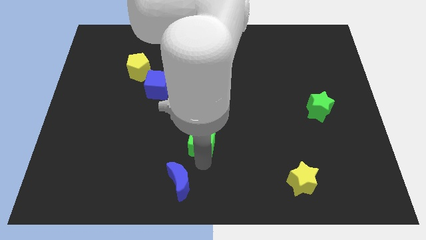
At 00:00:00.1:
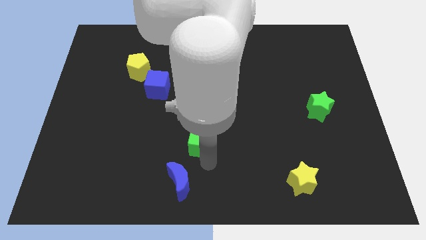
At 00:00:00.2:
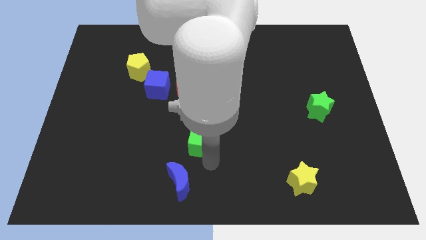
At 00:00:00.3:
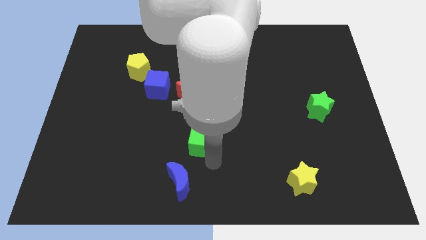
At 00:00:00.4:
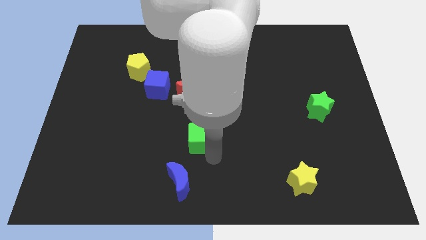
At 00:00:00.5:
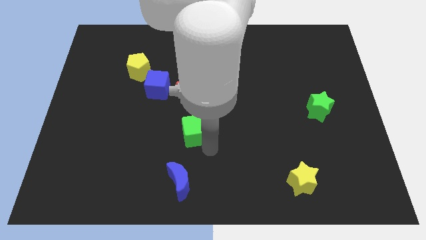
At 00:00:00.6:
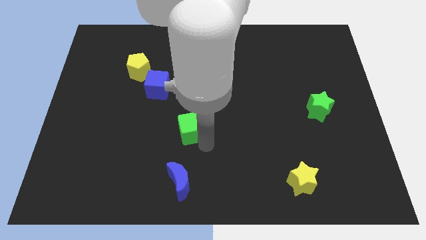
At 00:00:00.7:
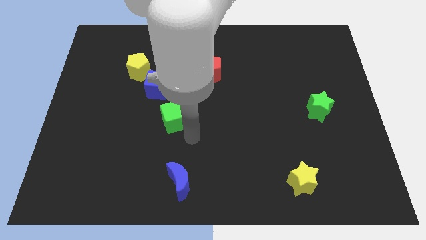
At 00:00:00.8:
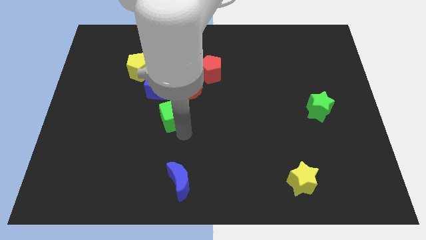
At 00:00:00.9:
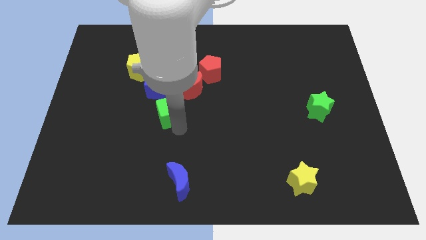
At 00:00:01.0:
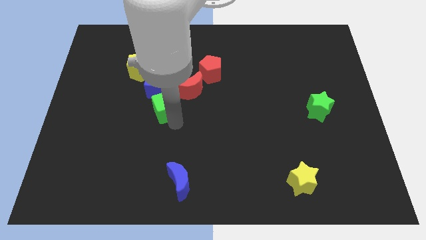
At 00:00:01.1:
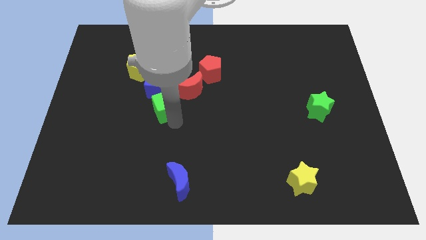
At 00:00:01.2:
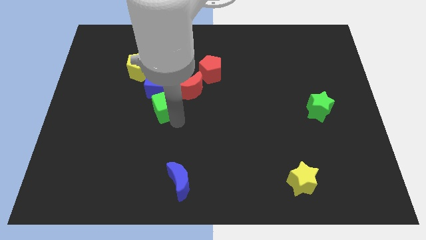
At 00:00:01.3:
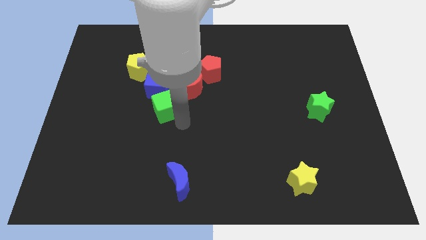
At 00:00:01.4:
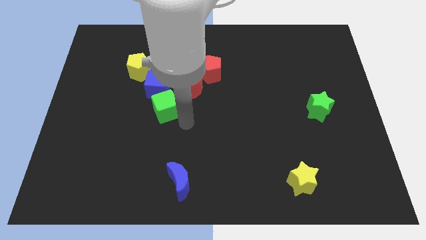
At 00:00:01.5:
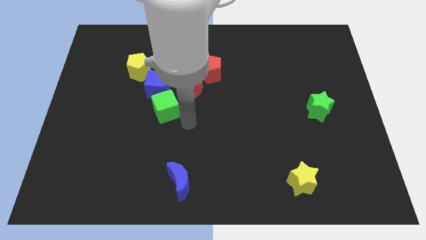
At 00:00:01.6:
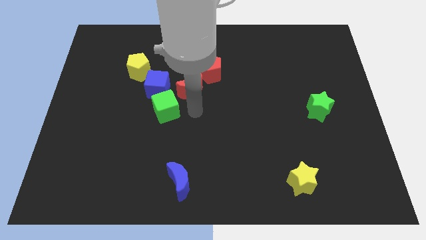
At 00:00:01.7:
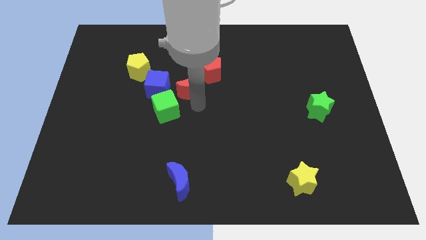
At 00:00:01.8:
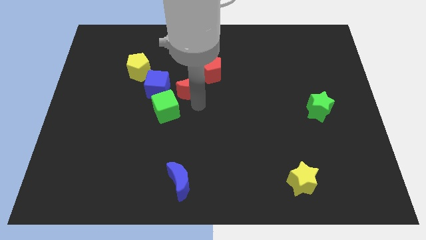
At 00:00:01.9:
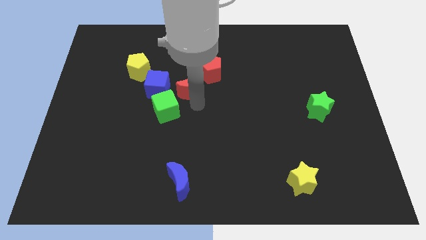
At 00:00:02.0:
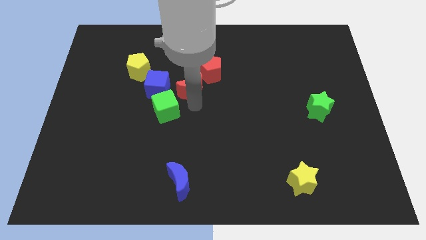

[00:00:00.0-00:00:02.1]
push green cube behind the blue cube

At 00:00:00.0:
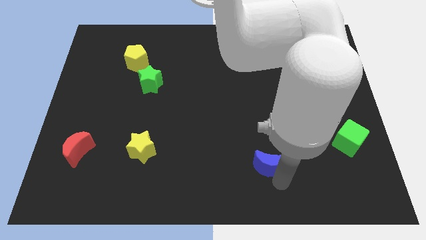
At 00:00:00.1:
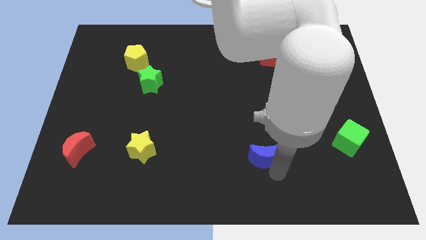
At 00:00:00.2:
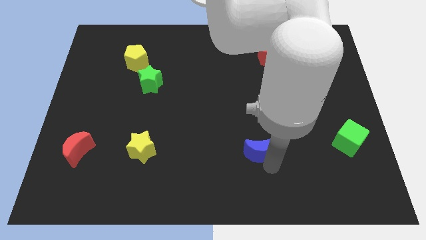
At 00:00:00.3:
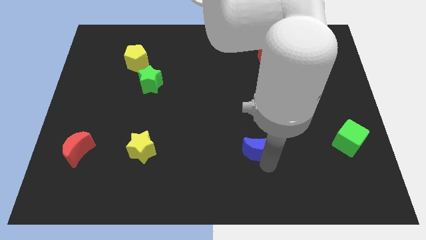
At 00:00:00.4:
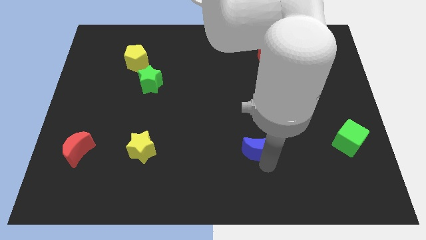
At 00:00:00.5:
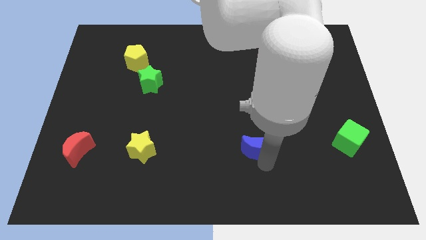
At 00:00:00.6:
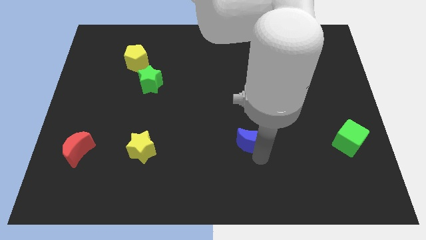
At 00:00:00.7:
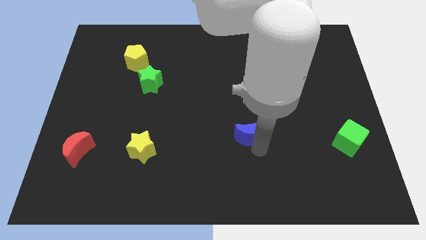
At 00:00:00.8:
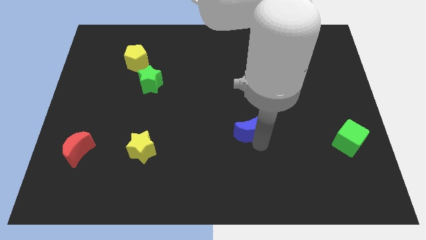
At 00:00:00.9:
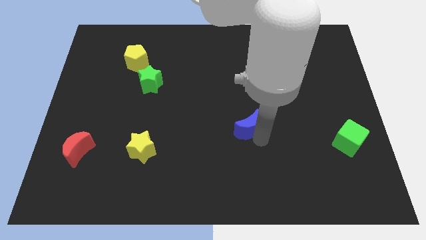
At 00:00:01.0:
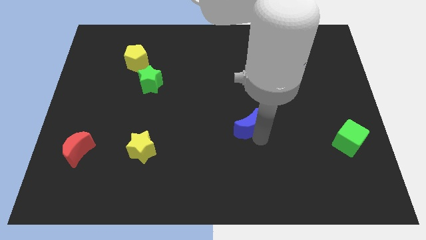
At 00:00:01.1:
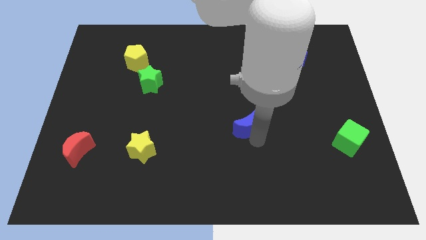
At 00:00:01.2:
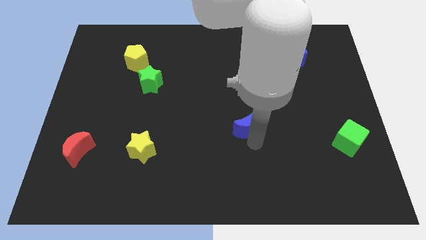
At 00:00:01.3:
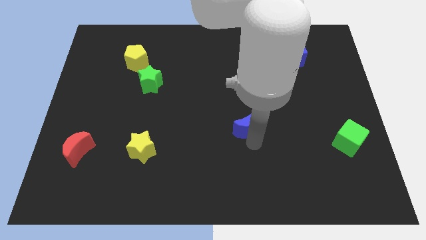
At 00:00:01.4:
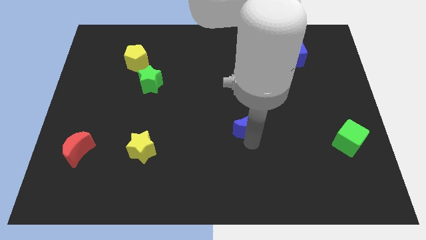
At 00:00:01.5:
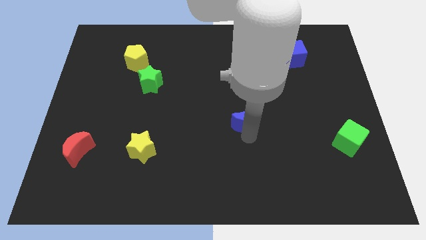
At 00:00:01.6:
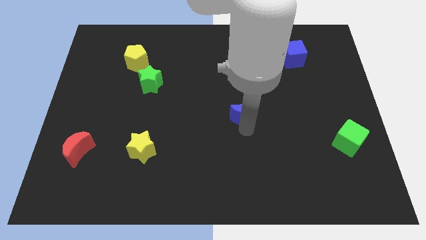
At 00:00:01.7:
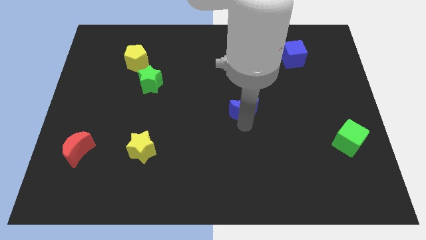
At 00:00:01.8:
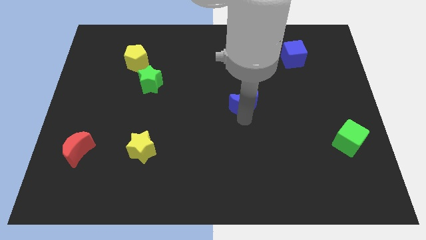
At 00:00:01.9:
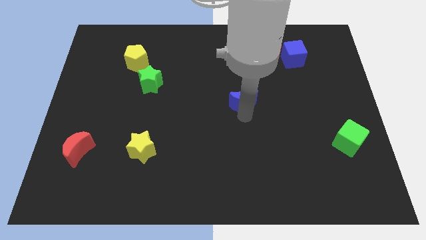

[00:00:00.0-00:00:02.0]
place the blue cube at center of the board

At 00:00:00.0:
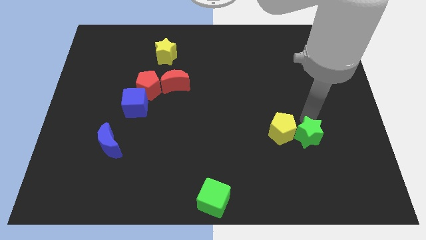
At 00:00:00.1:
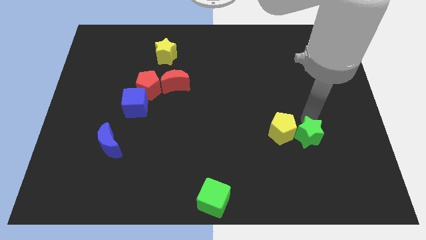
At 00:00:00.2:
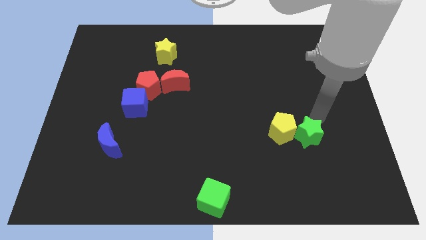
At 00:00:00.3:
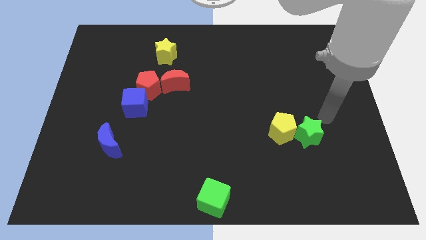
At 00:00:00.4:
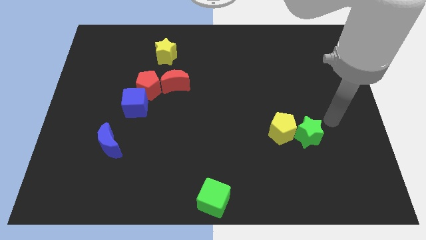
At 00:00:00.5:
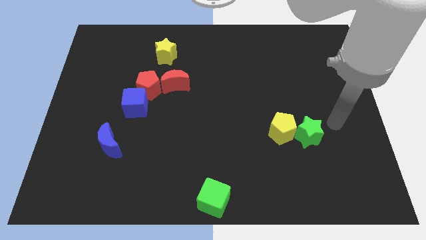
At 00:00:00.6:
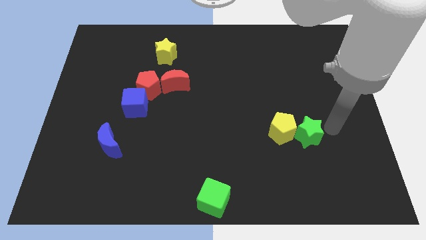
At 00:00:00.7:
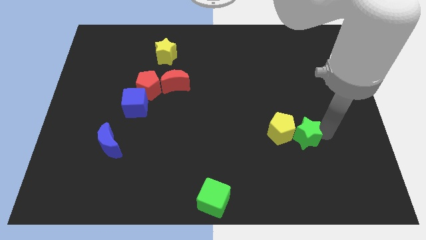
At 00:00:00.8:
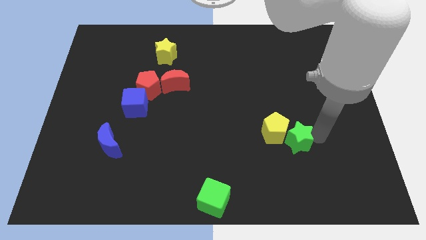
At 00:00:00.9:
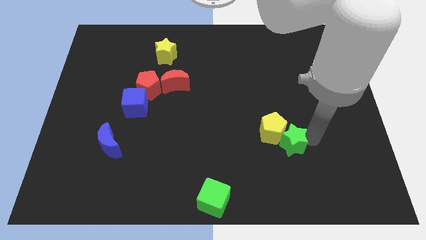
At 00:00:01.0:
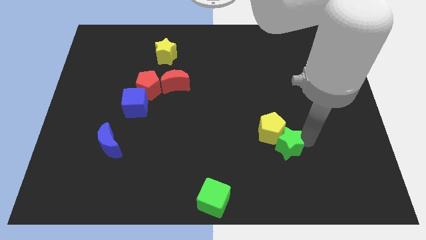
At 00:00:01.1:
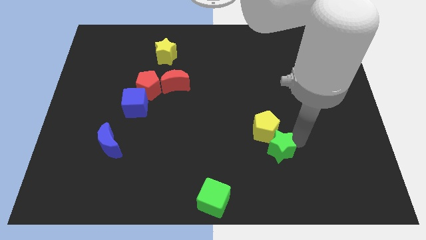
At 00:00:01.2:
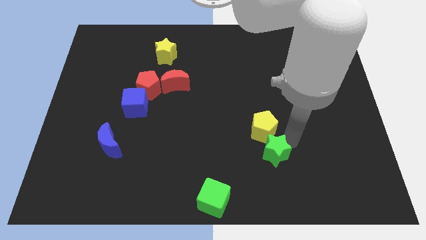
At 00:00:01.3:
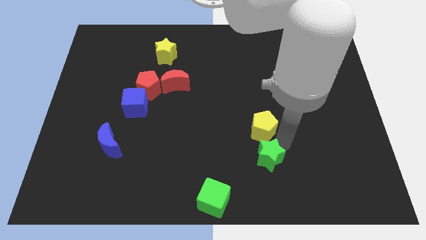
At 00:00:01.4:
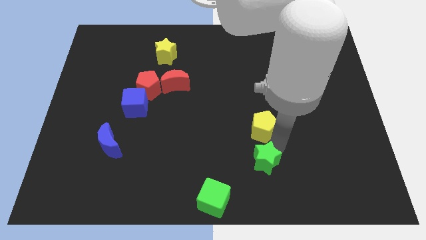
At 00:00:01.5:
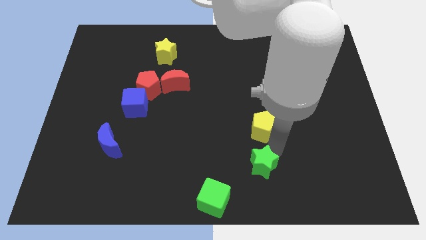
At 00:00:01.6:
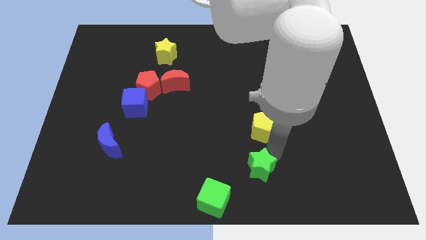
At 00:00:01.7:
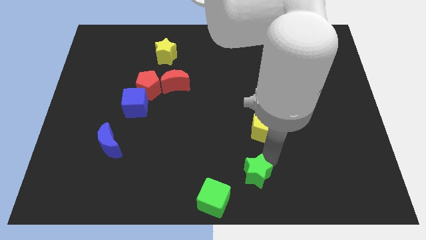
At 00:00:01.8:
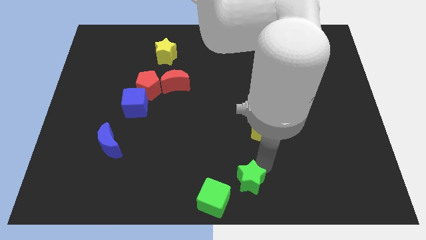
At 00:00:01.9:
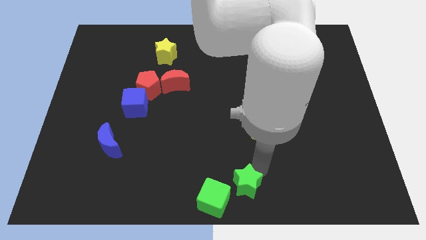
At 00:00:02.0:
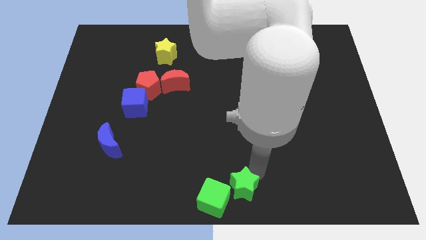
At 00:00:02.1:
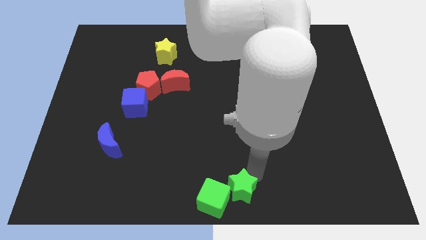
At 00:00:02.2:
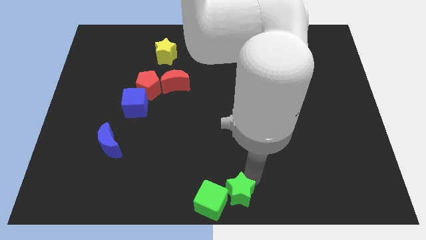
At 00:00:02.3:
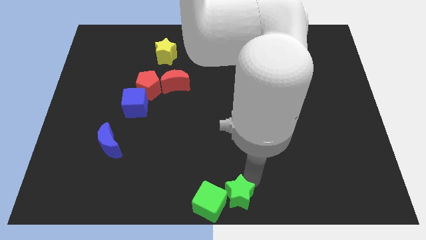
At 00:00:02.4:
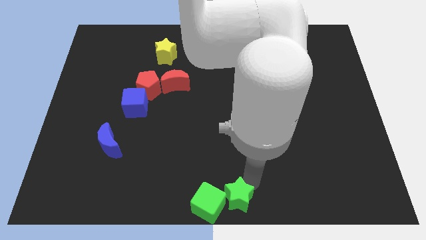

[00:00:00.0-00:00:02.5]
separate the green star from the yellow pentagon

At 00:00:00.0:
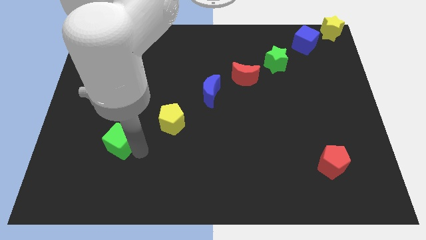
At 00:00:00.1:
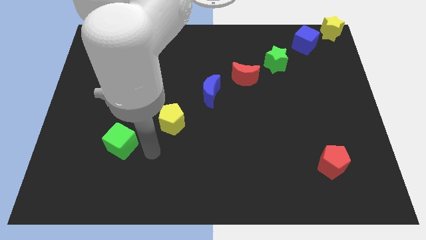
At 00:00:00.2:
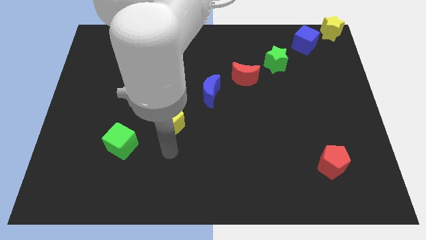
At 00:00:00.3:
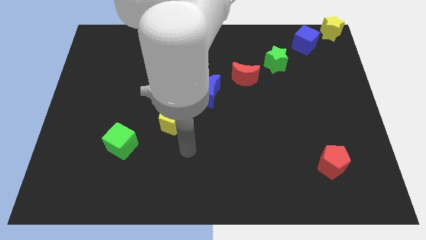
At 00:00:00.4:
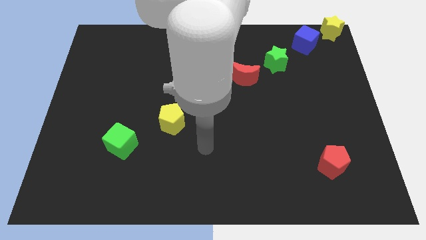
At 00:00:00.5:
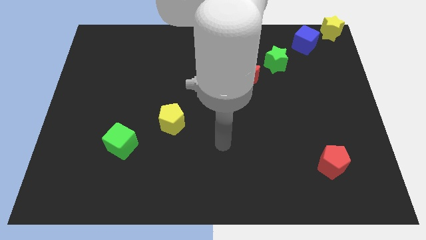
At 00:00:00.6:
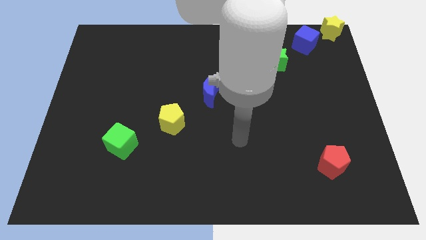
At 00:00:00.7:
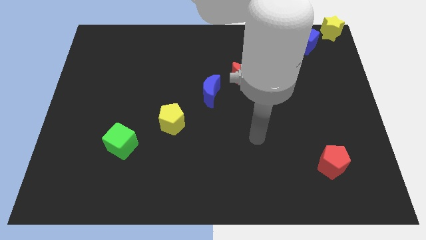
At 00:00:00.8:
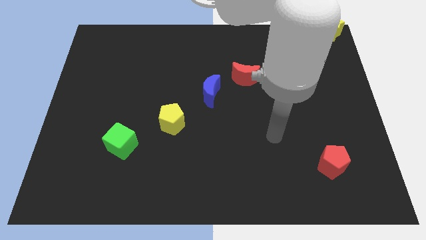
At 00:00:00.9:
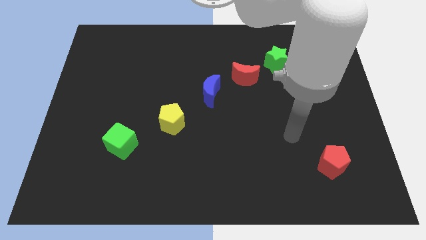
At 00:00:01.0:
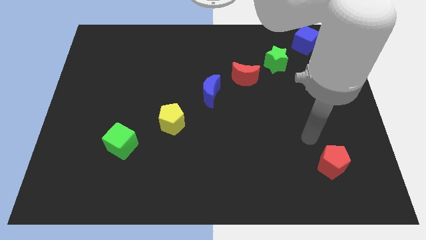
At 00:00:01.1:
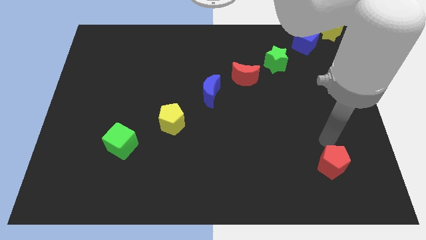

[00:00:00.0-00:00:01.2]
move the arm away from the green cube

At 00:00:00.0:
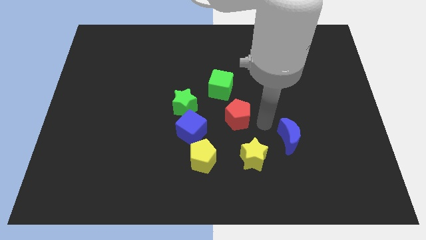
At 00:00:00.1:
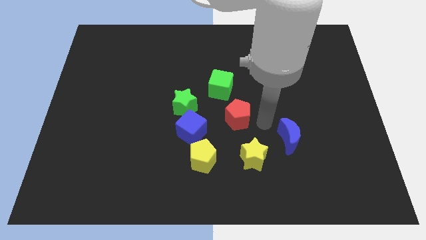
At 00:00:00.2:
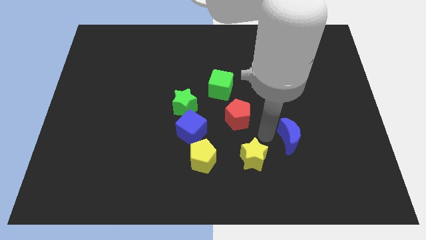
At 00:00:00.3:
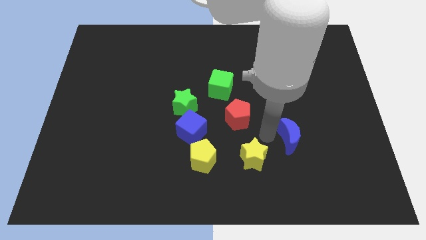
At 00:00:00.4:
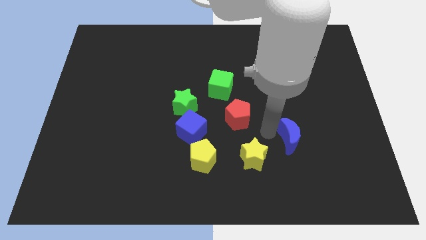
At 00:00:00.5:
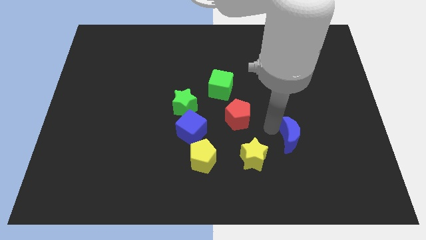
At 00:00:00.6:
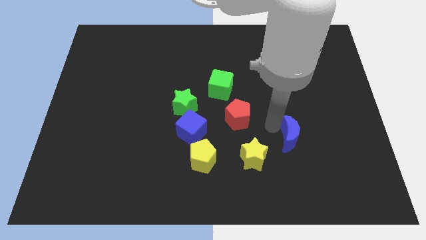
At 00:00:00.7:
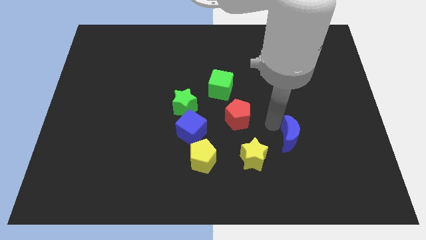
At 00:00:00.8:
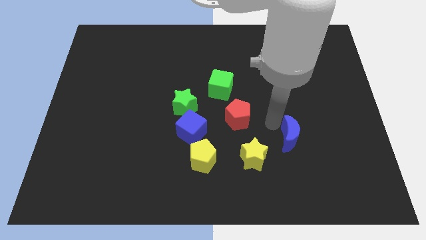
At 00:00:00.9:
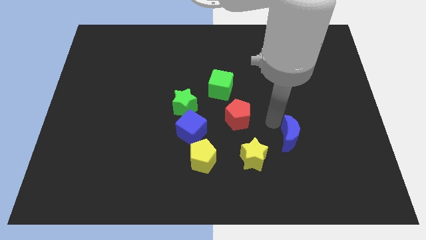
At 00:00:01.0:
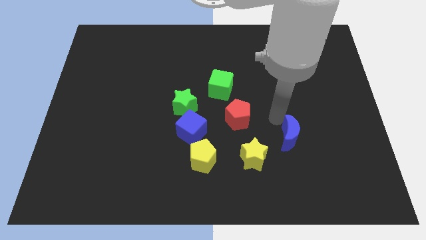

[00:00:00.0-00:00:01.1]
slightly push the blue crescent on the board
